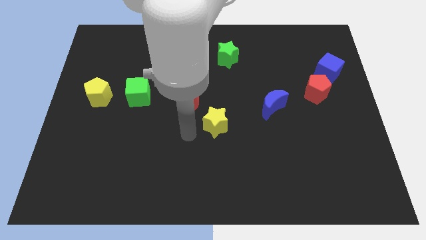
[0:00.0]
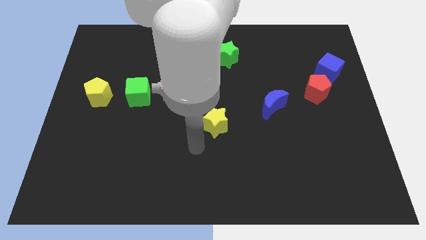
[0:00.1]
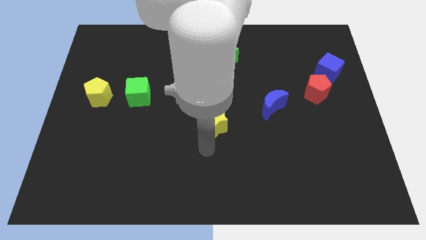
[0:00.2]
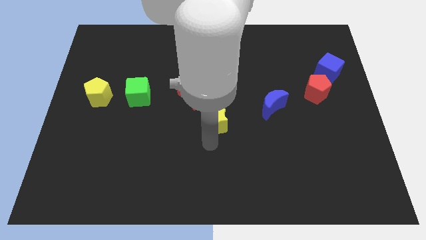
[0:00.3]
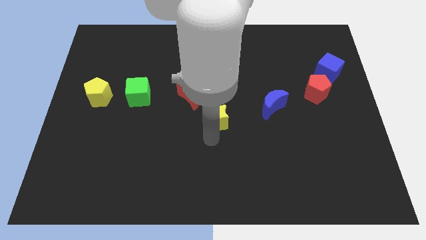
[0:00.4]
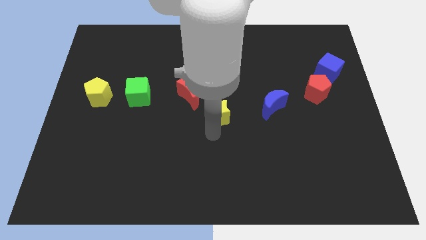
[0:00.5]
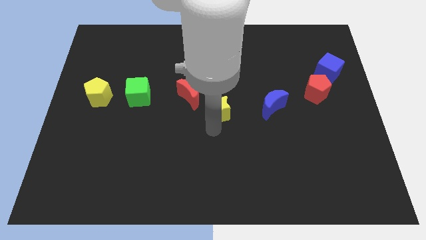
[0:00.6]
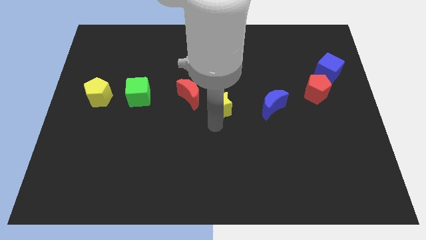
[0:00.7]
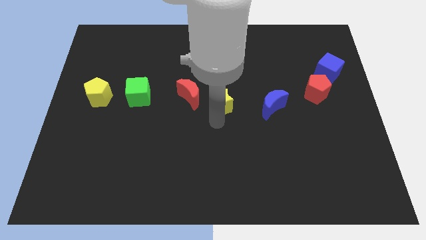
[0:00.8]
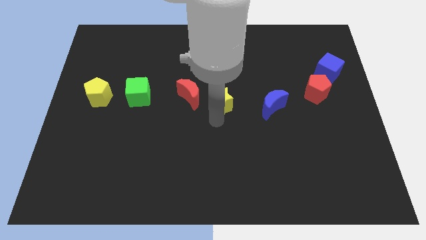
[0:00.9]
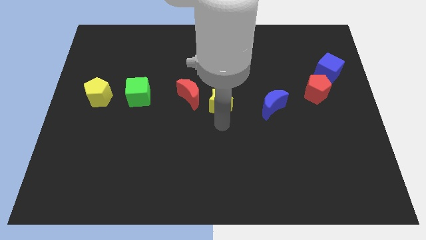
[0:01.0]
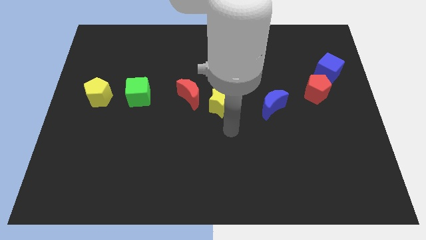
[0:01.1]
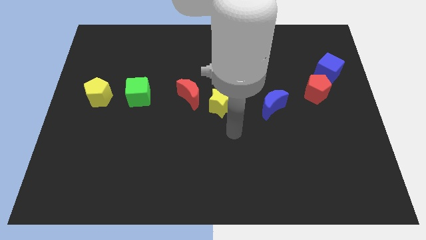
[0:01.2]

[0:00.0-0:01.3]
push yellow star to center of the board

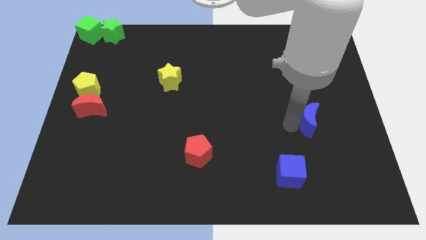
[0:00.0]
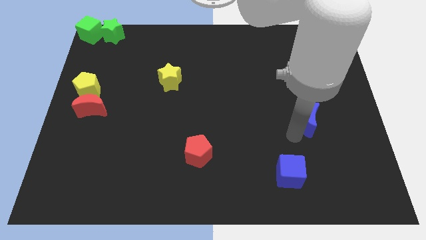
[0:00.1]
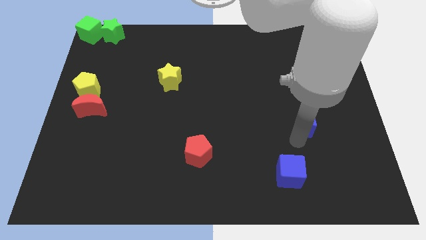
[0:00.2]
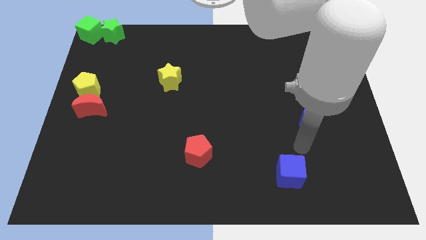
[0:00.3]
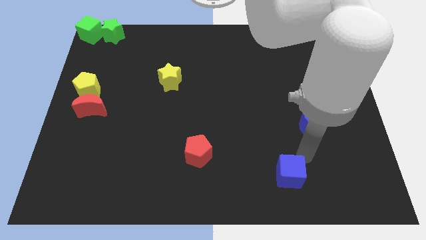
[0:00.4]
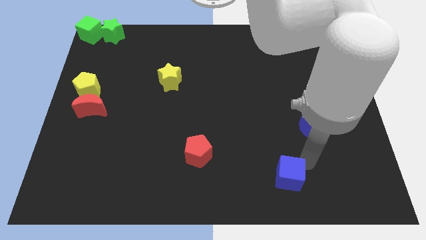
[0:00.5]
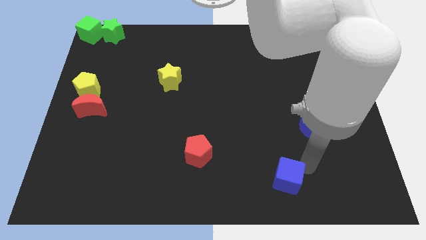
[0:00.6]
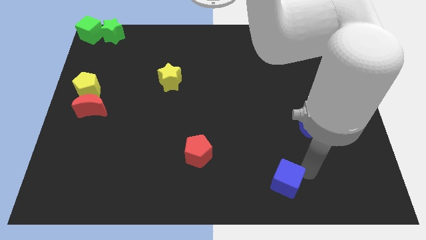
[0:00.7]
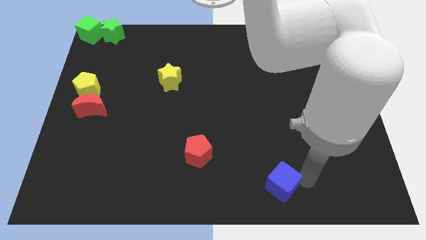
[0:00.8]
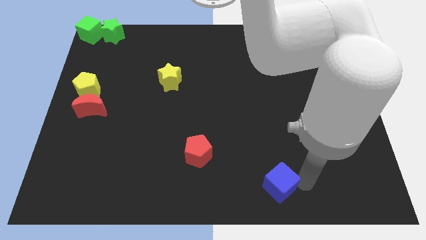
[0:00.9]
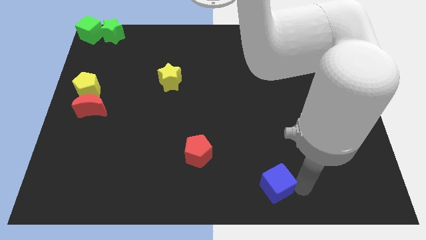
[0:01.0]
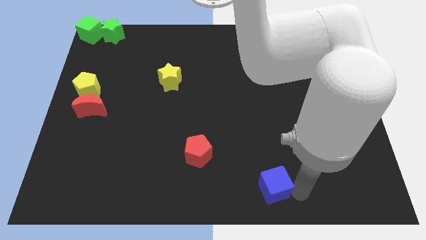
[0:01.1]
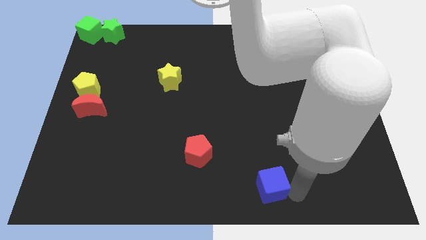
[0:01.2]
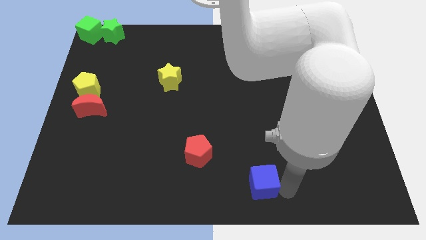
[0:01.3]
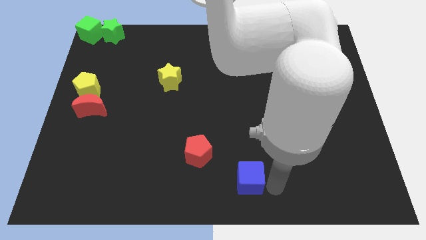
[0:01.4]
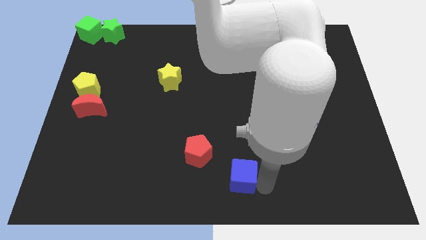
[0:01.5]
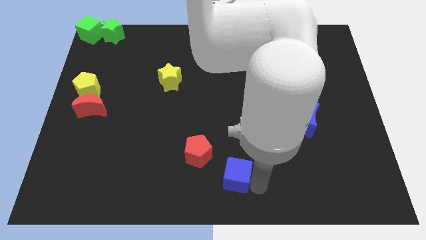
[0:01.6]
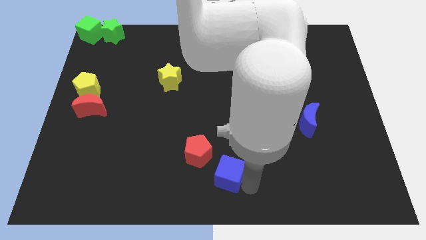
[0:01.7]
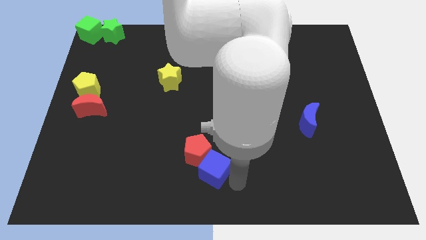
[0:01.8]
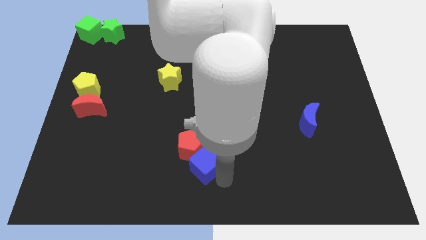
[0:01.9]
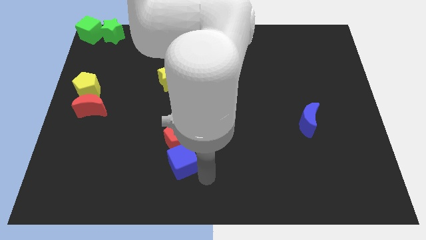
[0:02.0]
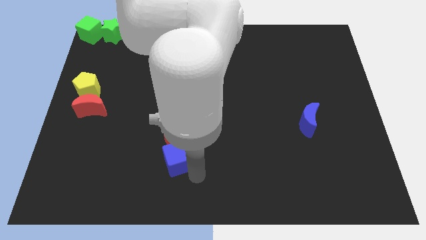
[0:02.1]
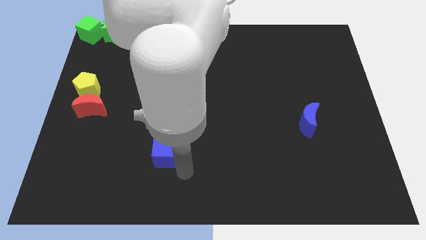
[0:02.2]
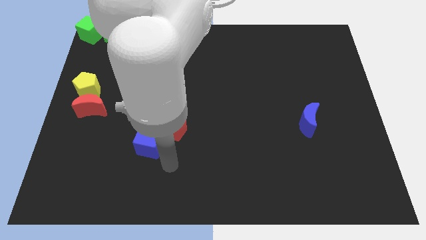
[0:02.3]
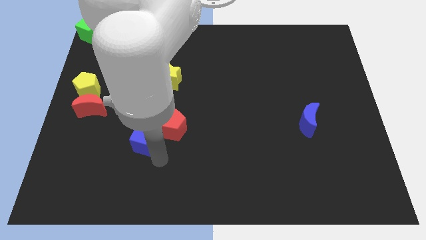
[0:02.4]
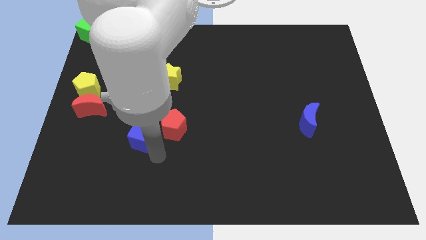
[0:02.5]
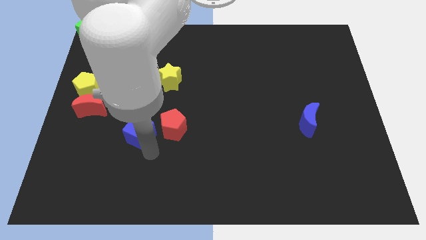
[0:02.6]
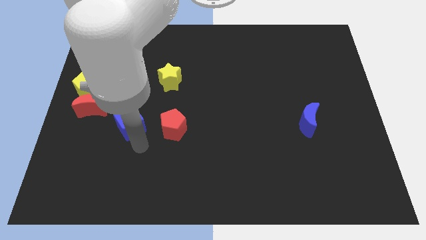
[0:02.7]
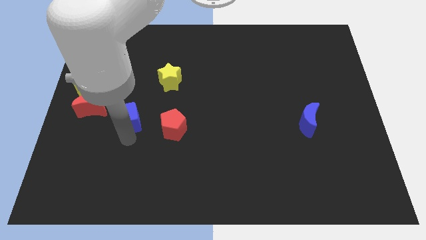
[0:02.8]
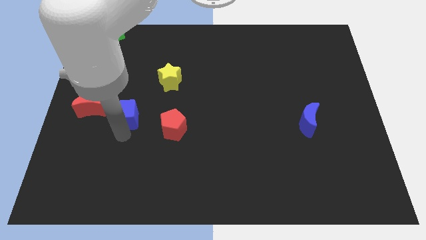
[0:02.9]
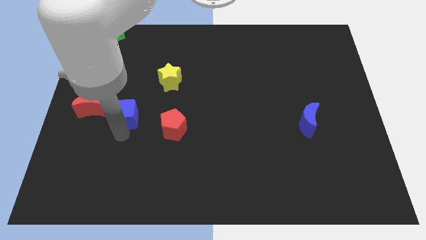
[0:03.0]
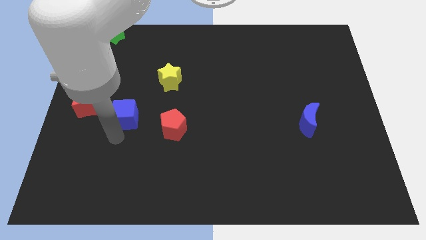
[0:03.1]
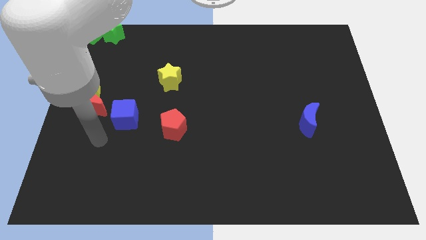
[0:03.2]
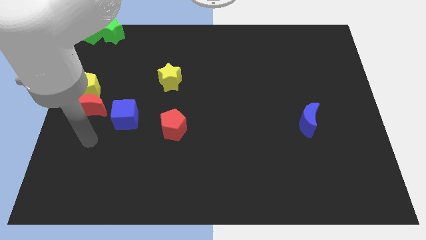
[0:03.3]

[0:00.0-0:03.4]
move blue cube in between red blocks

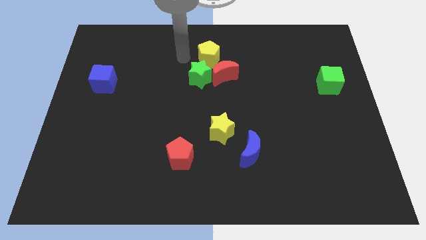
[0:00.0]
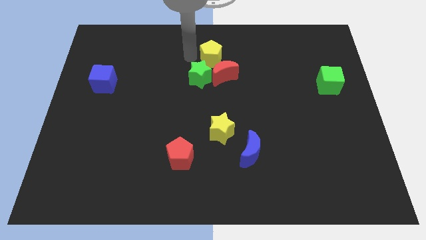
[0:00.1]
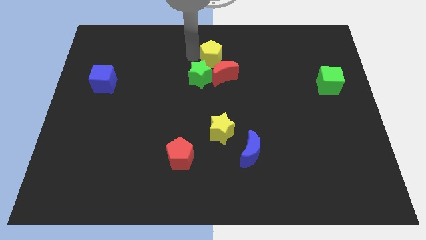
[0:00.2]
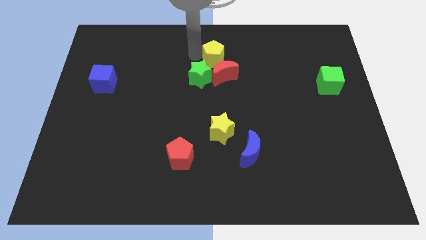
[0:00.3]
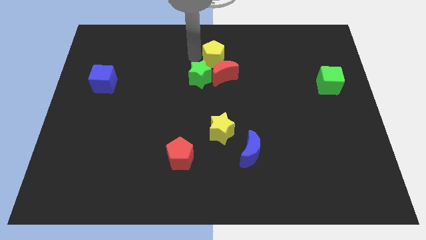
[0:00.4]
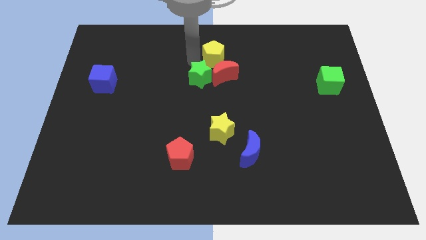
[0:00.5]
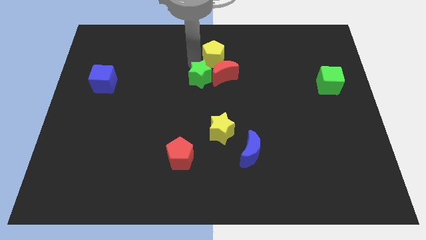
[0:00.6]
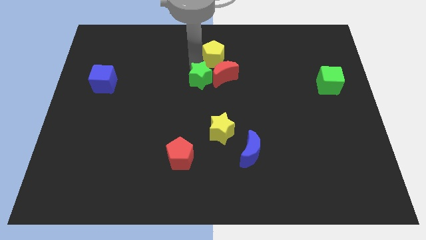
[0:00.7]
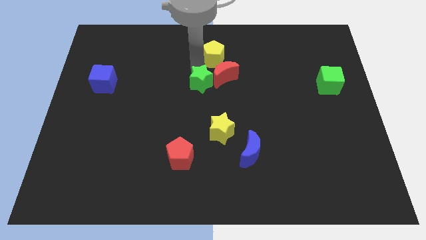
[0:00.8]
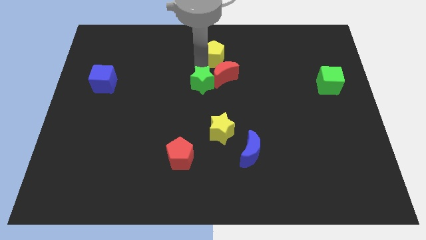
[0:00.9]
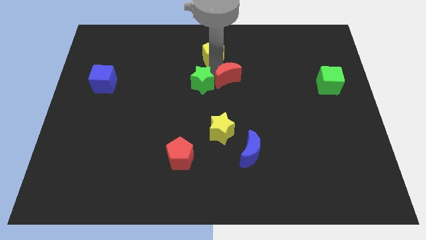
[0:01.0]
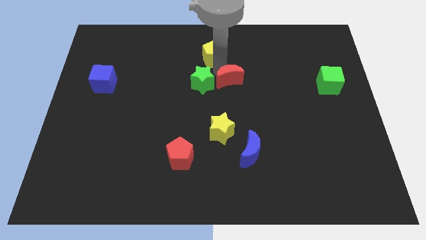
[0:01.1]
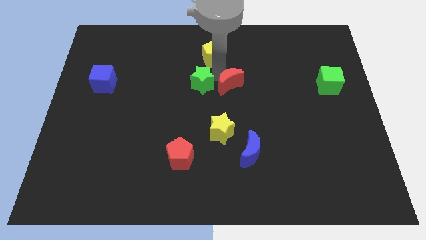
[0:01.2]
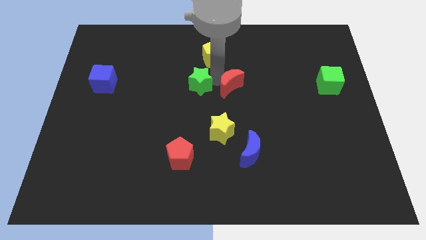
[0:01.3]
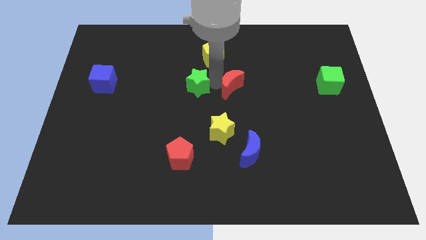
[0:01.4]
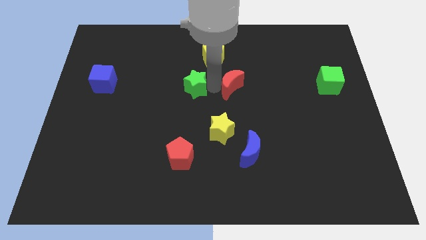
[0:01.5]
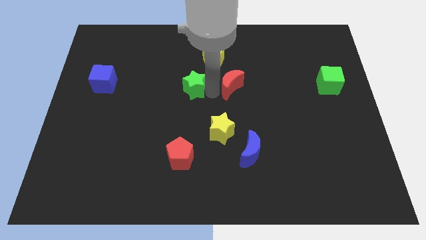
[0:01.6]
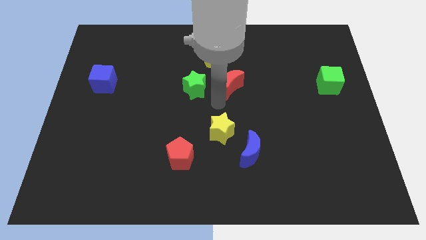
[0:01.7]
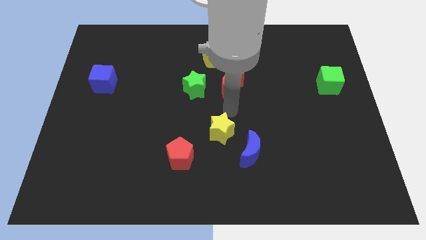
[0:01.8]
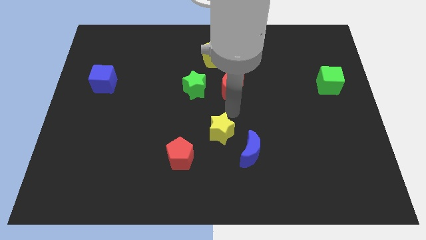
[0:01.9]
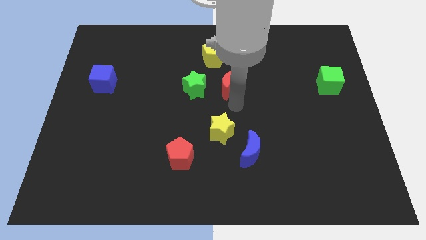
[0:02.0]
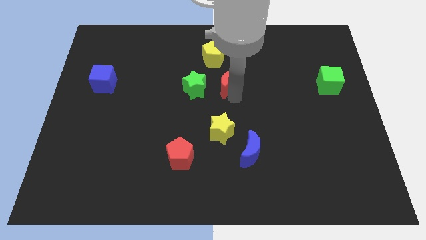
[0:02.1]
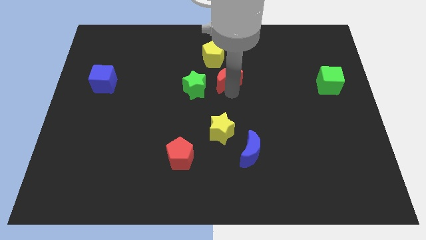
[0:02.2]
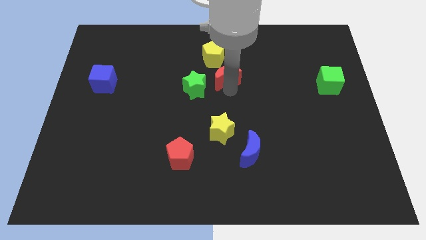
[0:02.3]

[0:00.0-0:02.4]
separate the red moon and green star

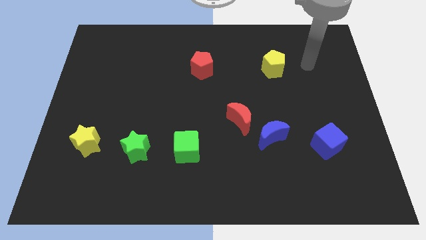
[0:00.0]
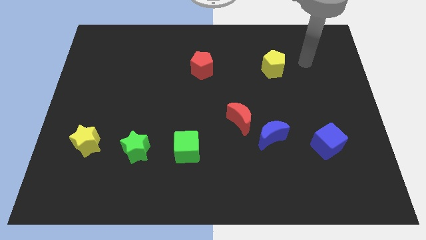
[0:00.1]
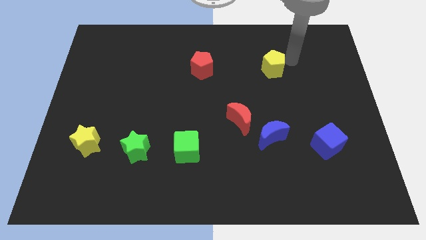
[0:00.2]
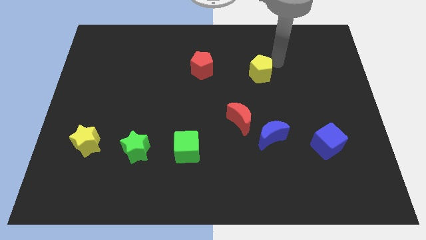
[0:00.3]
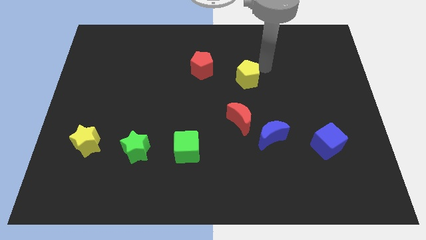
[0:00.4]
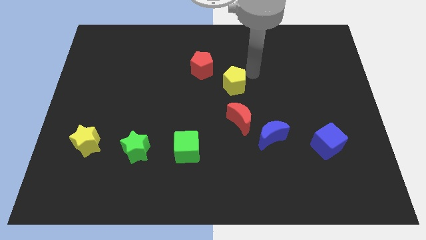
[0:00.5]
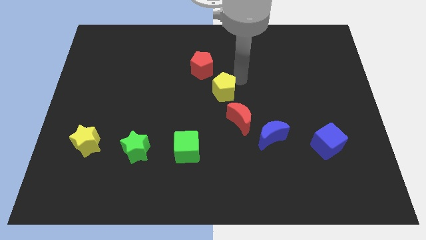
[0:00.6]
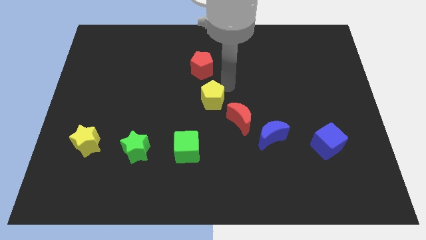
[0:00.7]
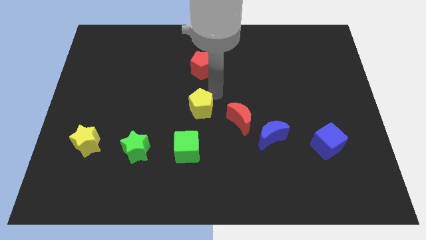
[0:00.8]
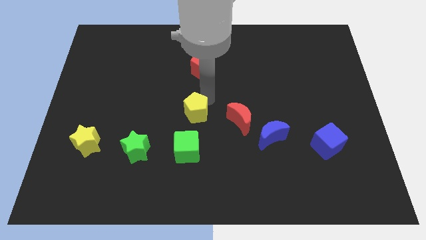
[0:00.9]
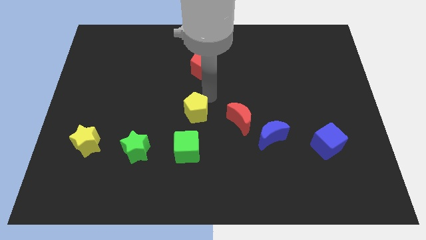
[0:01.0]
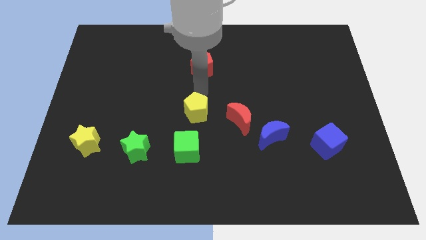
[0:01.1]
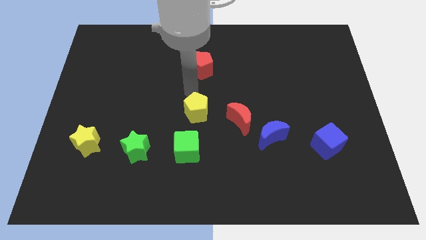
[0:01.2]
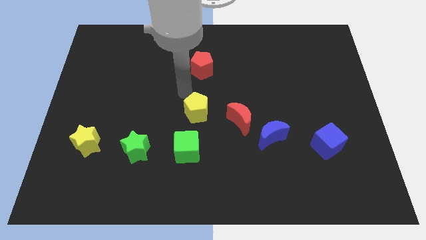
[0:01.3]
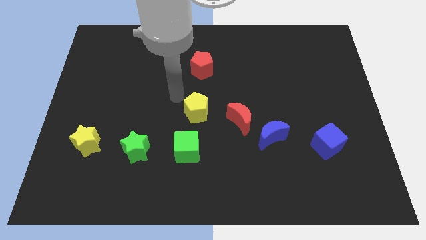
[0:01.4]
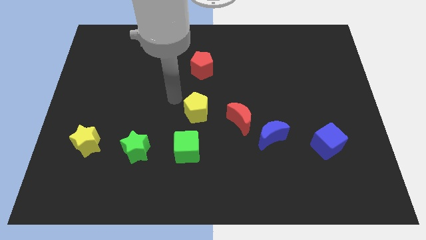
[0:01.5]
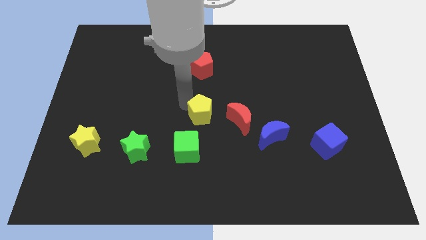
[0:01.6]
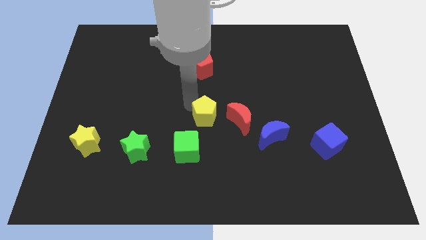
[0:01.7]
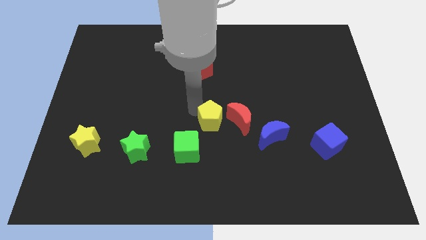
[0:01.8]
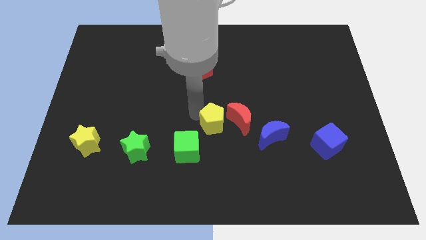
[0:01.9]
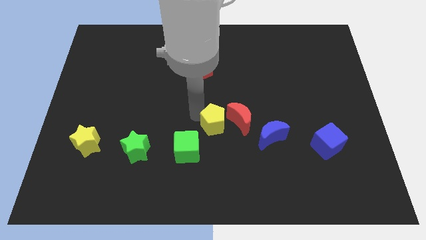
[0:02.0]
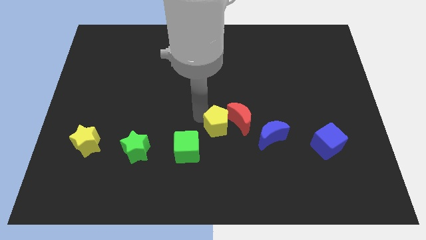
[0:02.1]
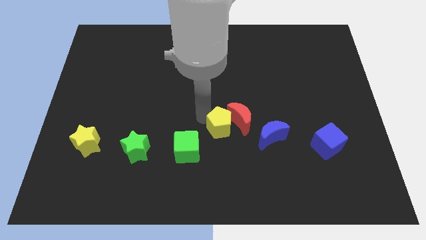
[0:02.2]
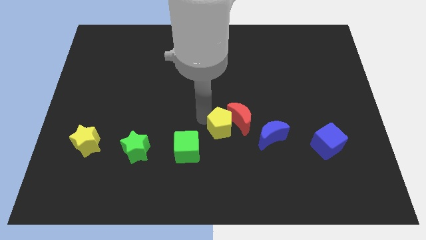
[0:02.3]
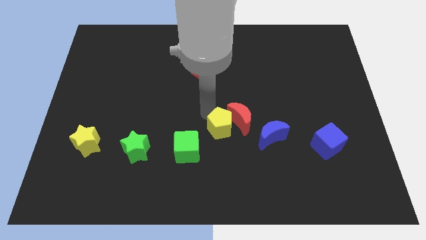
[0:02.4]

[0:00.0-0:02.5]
push the yellow pentagon to the left side of the red crescent
